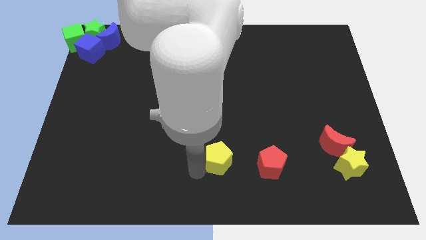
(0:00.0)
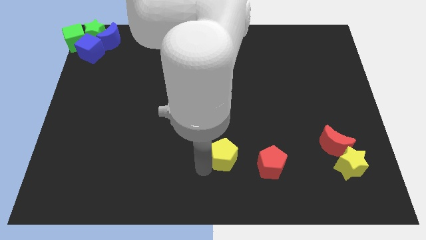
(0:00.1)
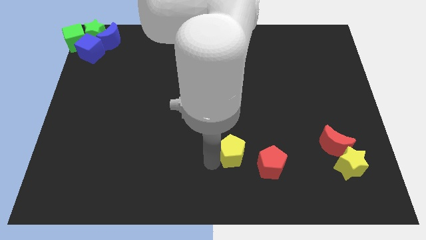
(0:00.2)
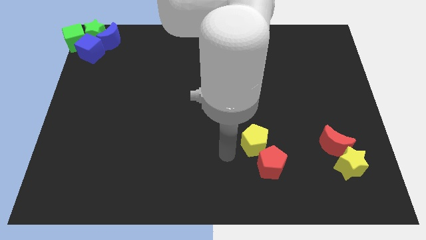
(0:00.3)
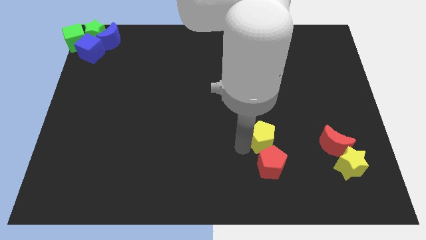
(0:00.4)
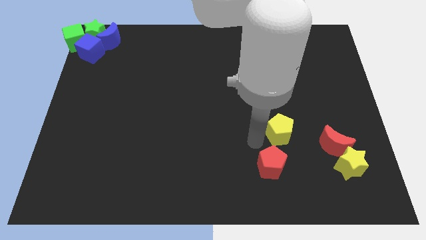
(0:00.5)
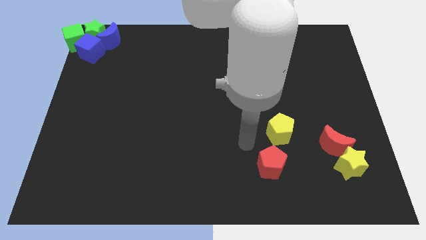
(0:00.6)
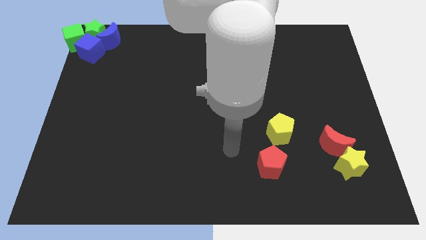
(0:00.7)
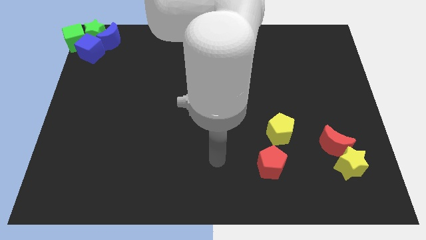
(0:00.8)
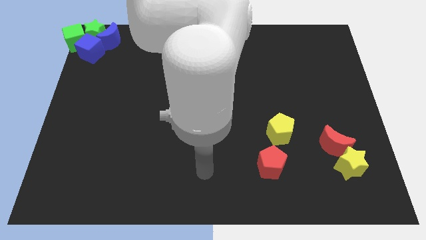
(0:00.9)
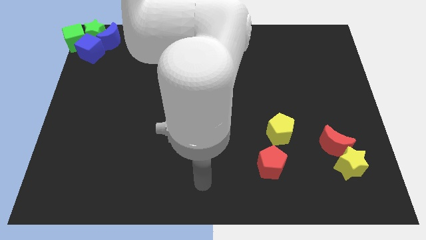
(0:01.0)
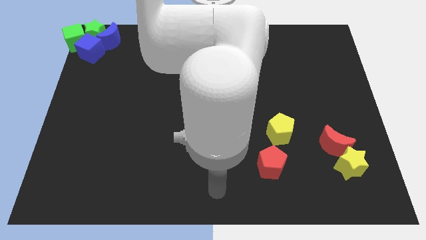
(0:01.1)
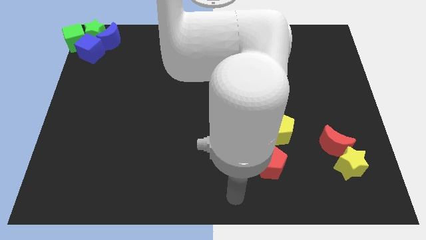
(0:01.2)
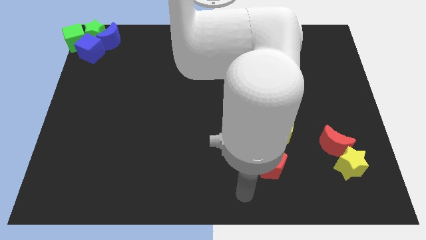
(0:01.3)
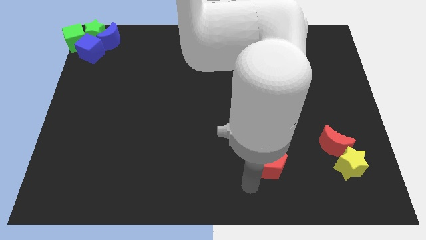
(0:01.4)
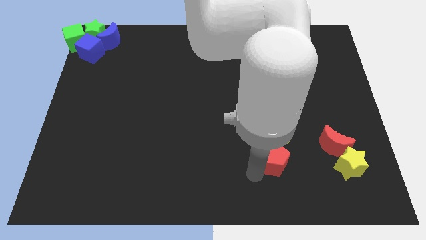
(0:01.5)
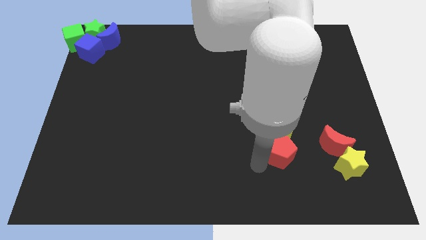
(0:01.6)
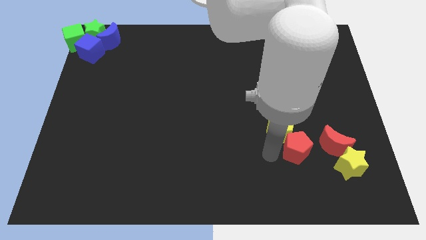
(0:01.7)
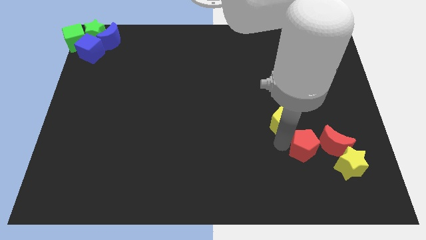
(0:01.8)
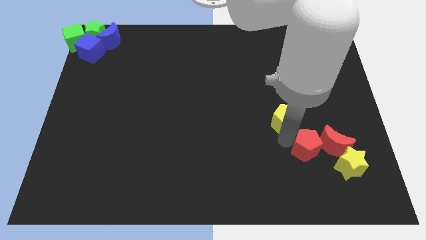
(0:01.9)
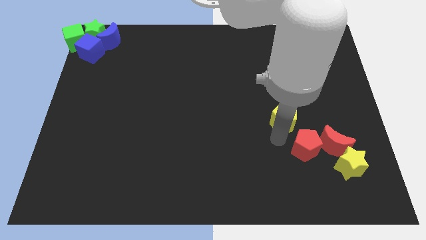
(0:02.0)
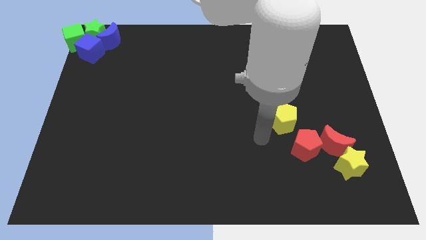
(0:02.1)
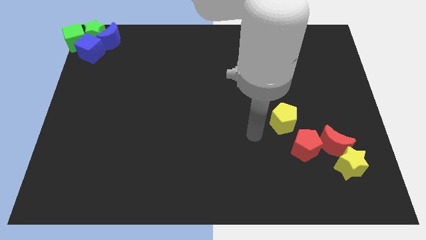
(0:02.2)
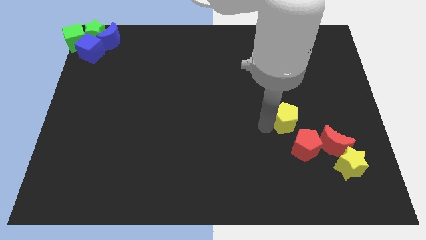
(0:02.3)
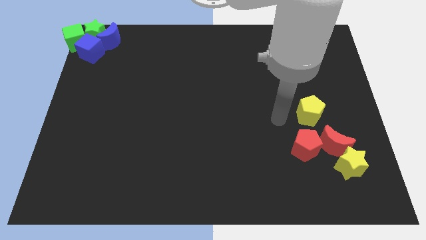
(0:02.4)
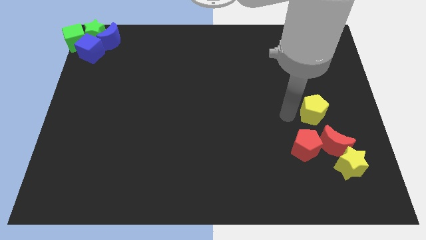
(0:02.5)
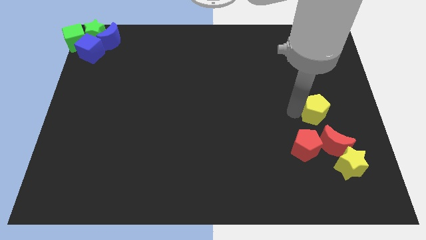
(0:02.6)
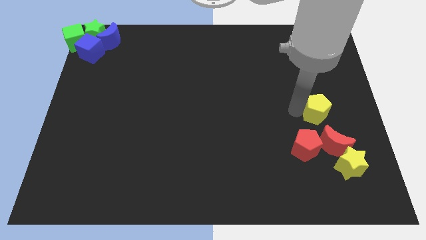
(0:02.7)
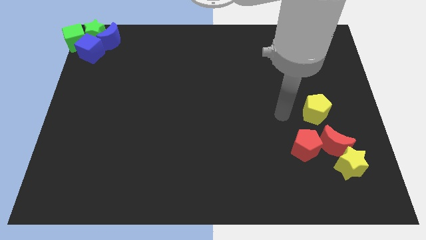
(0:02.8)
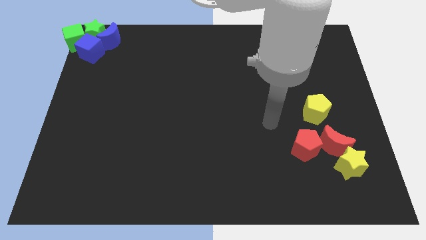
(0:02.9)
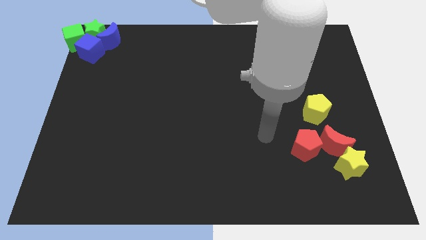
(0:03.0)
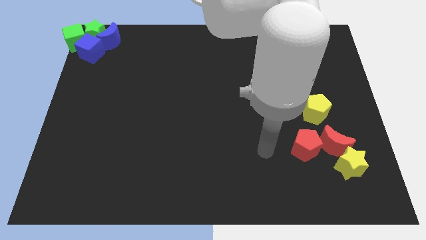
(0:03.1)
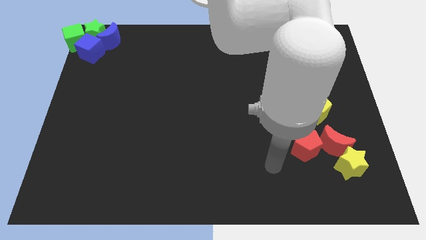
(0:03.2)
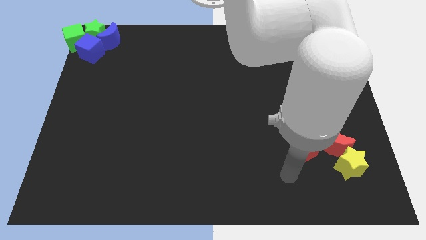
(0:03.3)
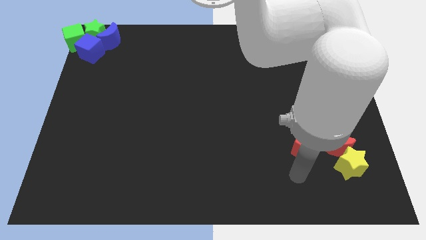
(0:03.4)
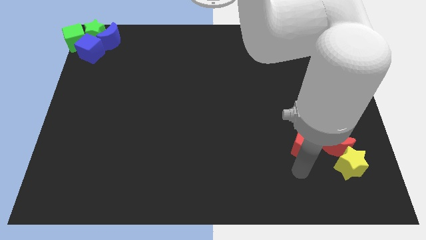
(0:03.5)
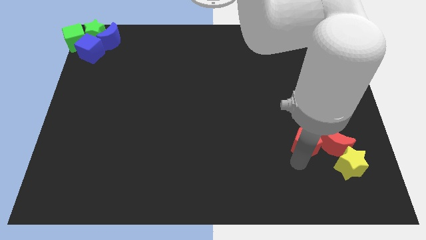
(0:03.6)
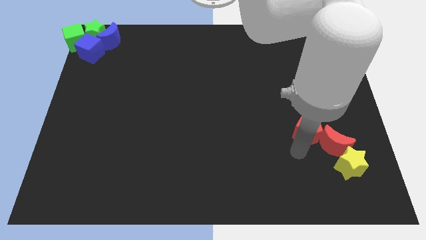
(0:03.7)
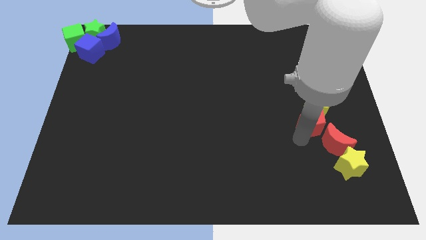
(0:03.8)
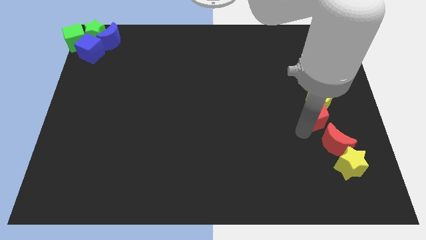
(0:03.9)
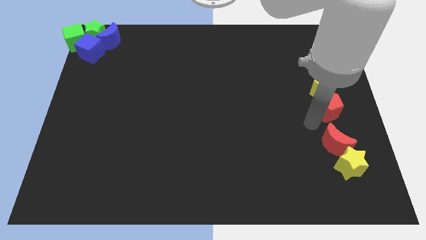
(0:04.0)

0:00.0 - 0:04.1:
push both the red pentagon and yellow pentagon towards the top right side of the board

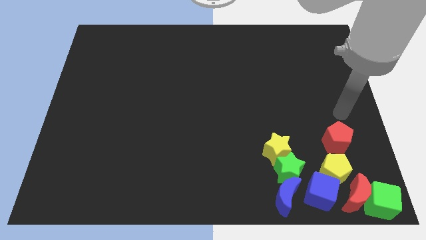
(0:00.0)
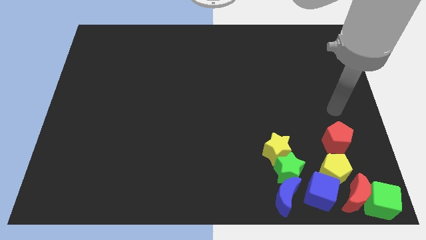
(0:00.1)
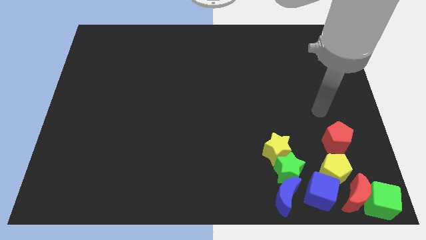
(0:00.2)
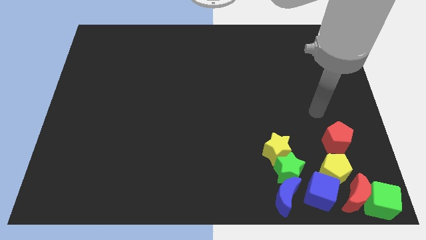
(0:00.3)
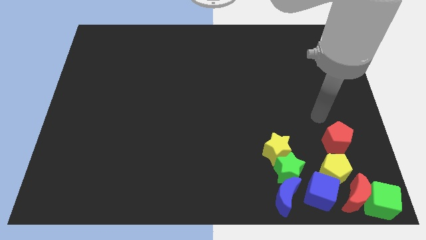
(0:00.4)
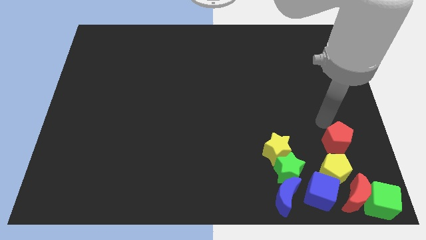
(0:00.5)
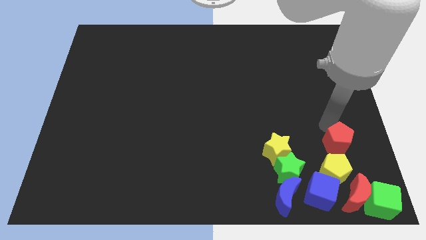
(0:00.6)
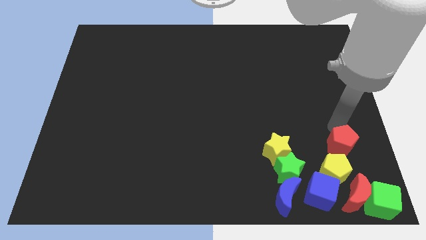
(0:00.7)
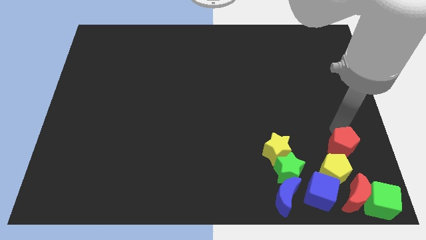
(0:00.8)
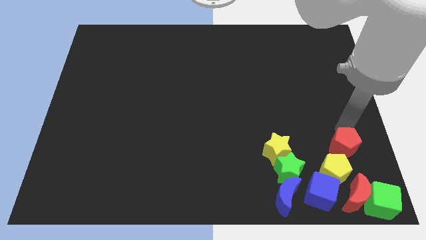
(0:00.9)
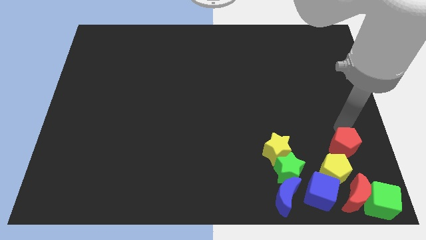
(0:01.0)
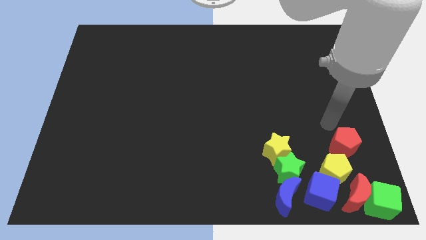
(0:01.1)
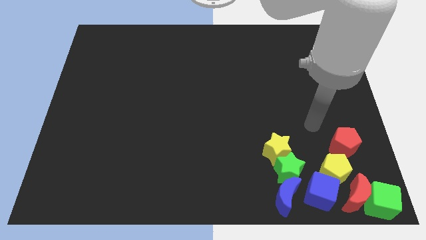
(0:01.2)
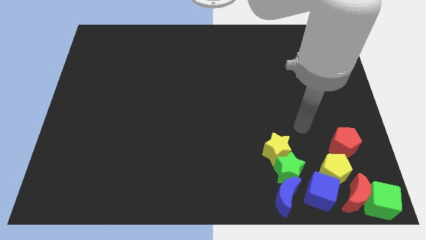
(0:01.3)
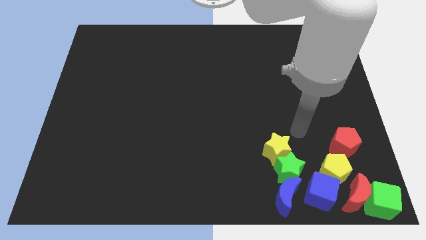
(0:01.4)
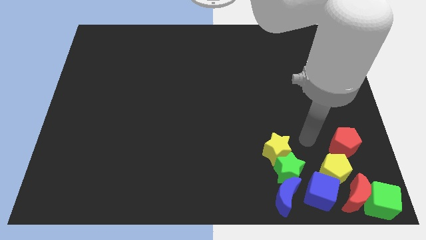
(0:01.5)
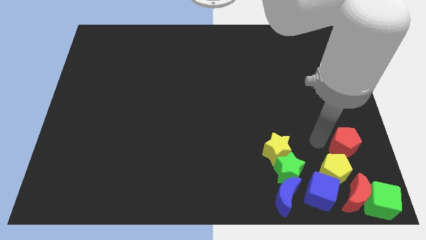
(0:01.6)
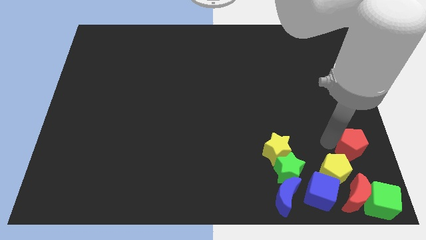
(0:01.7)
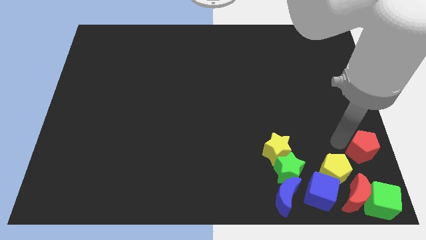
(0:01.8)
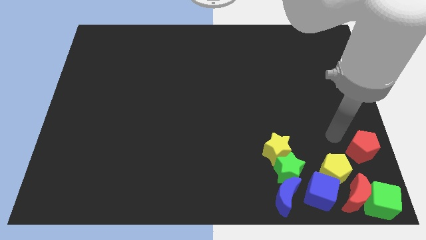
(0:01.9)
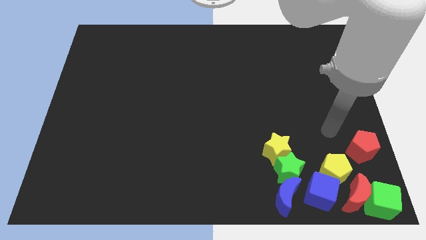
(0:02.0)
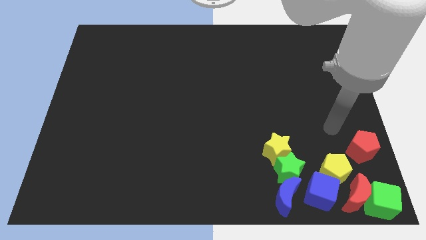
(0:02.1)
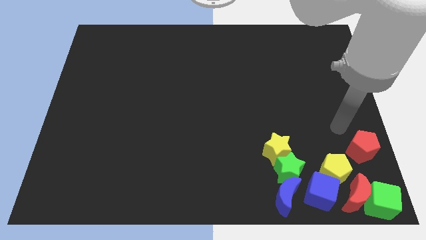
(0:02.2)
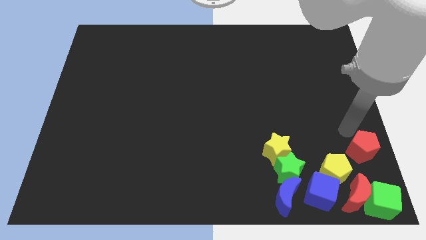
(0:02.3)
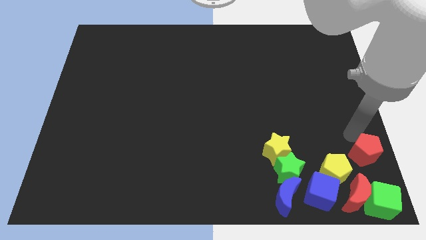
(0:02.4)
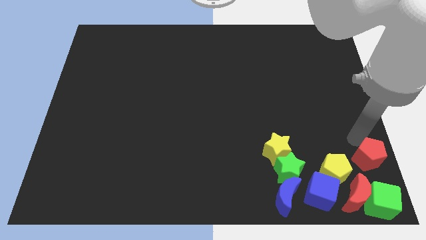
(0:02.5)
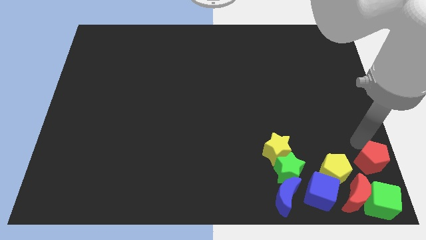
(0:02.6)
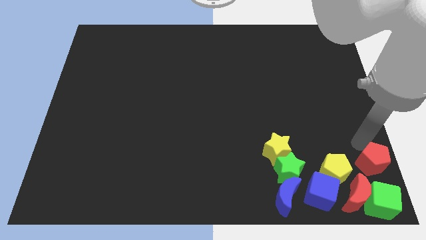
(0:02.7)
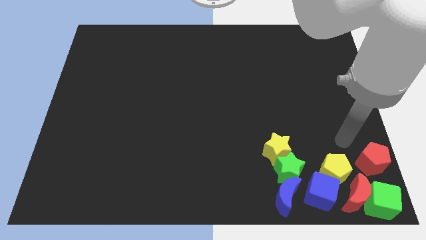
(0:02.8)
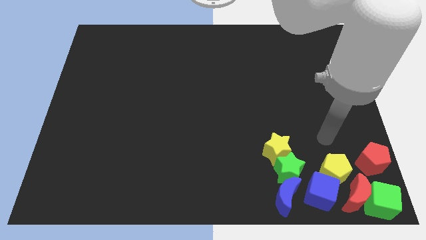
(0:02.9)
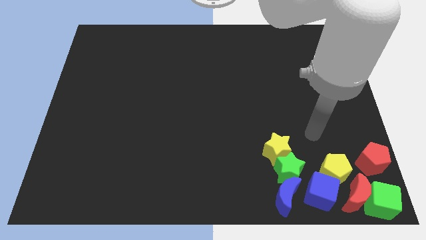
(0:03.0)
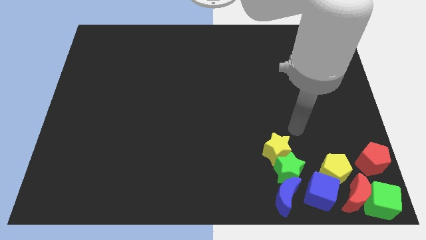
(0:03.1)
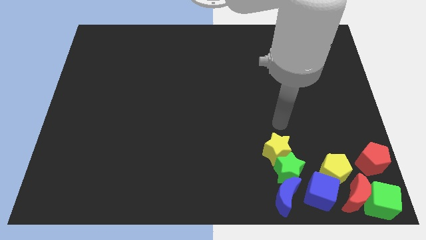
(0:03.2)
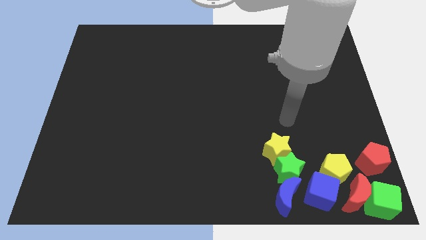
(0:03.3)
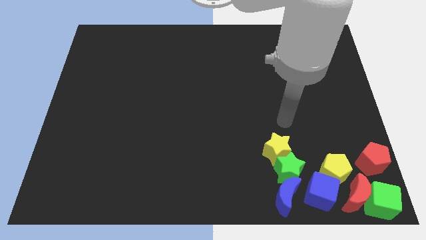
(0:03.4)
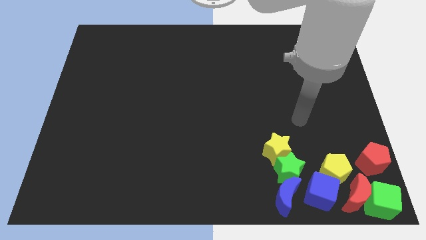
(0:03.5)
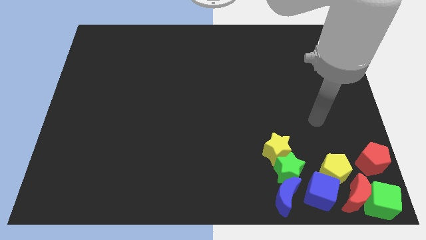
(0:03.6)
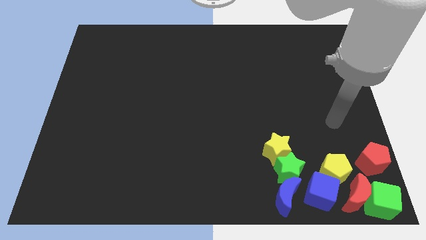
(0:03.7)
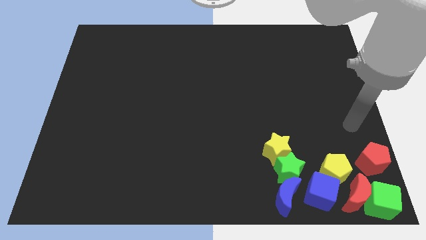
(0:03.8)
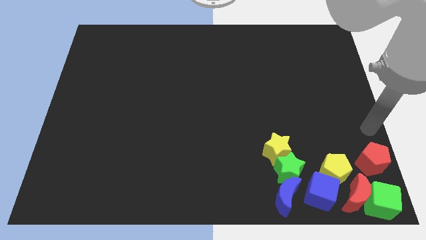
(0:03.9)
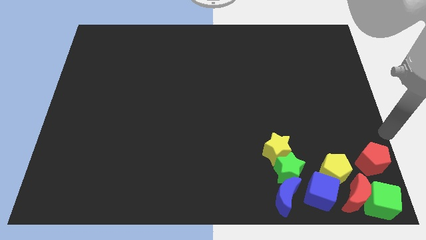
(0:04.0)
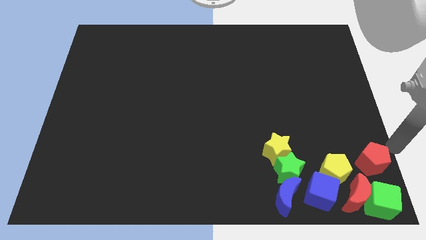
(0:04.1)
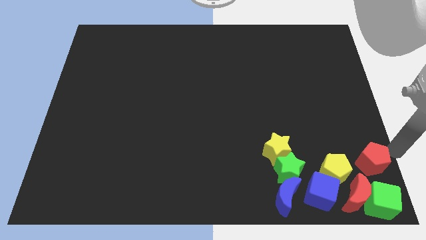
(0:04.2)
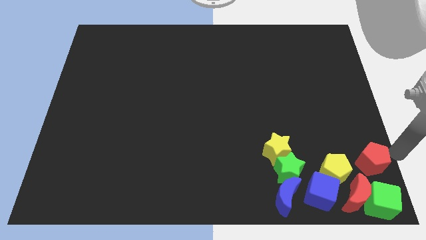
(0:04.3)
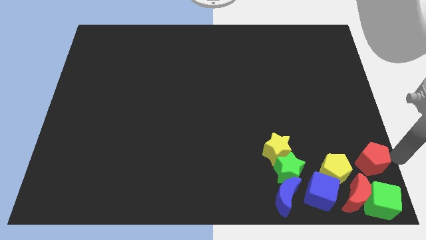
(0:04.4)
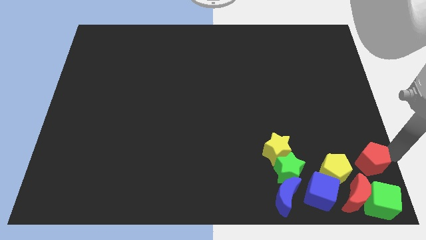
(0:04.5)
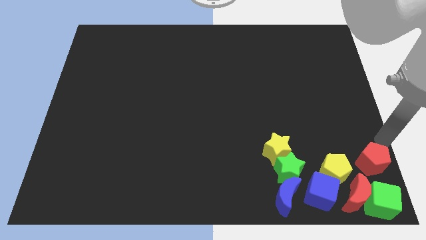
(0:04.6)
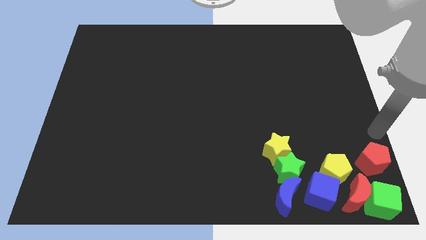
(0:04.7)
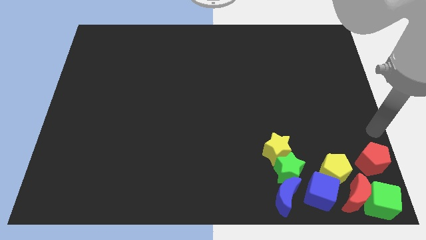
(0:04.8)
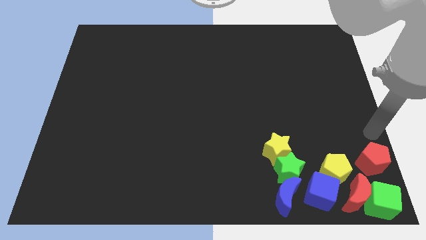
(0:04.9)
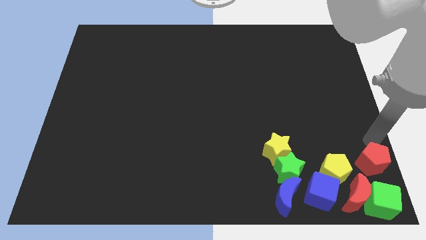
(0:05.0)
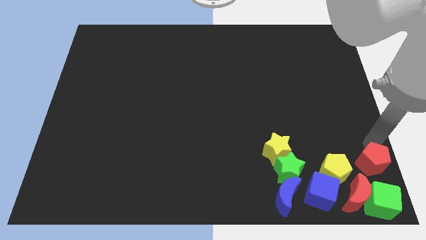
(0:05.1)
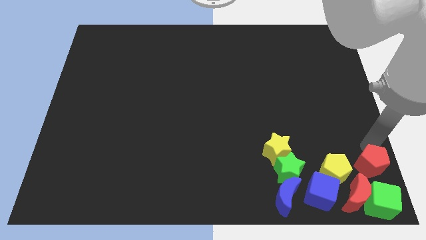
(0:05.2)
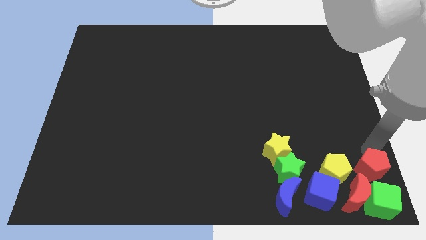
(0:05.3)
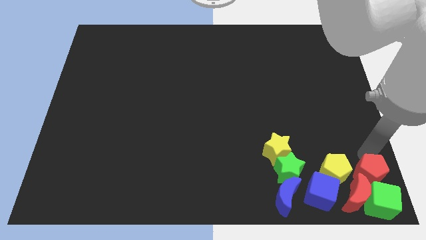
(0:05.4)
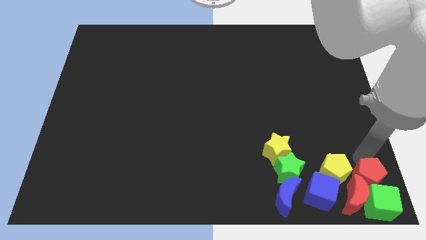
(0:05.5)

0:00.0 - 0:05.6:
move the red pentagon into the group of blocks
